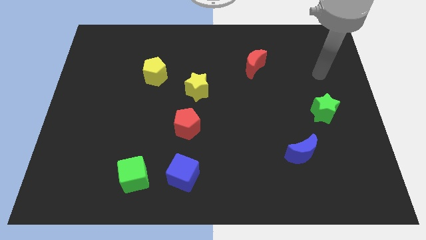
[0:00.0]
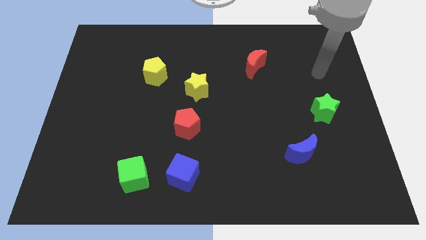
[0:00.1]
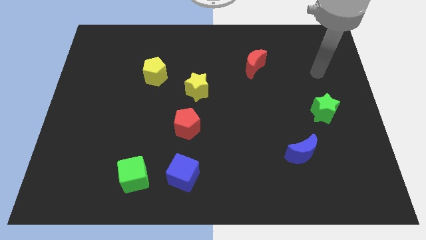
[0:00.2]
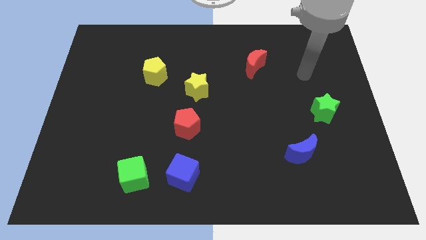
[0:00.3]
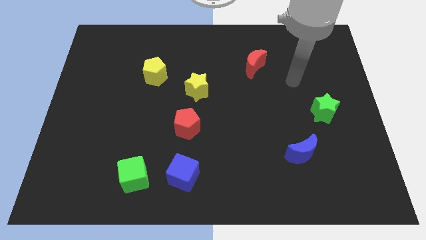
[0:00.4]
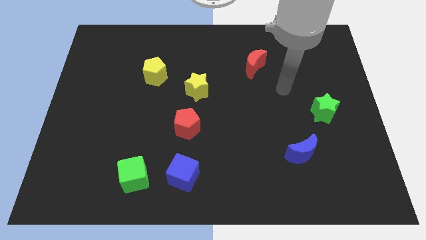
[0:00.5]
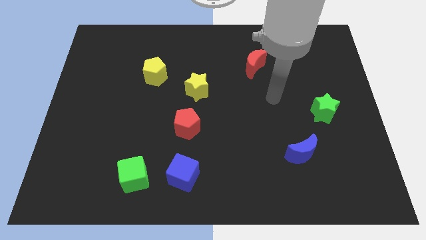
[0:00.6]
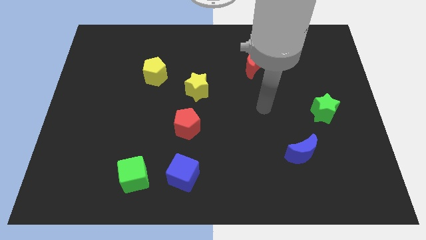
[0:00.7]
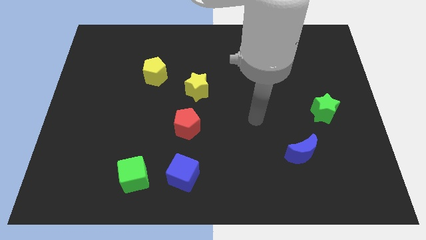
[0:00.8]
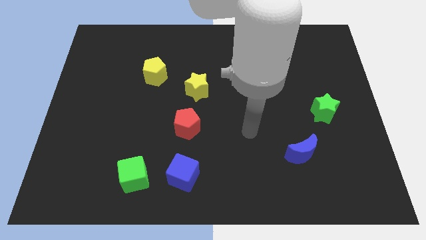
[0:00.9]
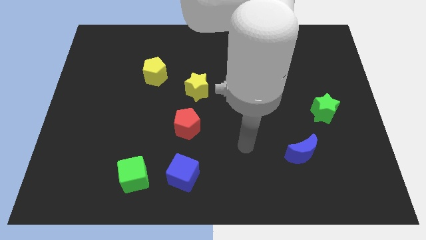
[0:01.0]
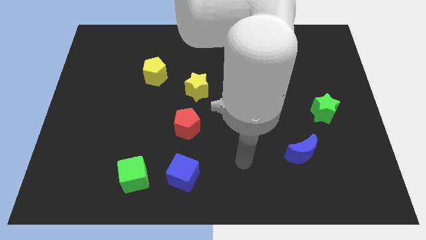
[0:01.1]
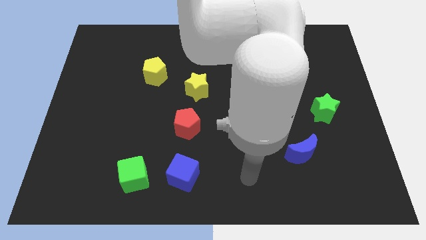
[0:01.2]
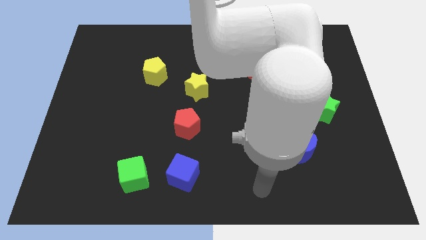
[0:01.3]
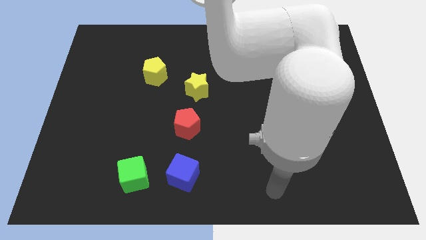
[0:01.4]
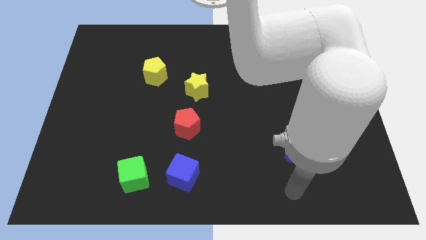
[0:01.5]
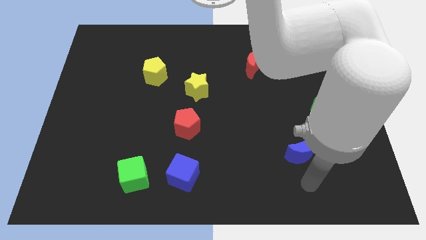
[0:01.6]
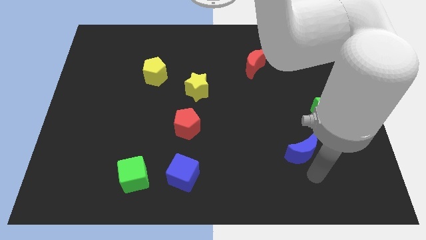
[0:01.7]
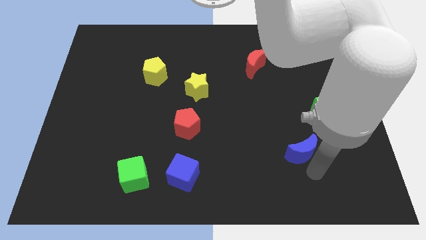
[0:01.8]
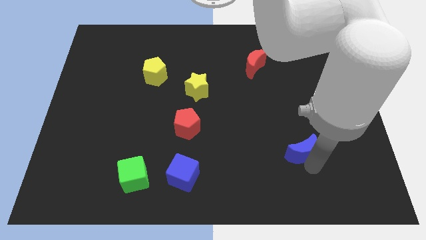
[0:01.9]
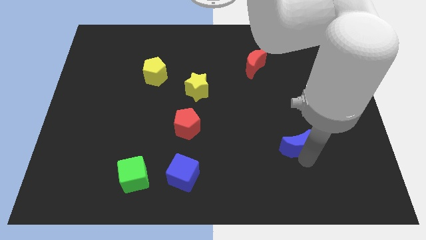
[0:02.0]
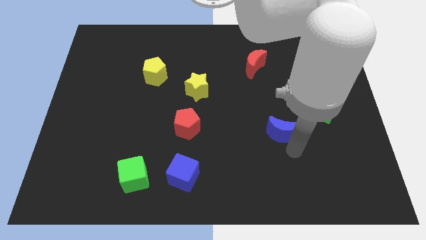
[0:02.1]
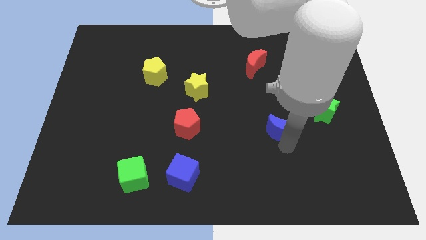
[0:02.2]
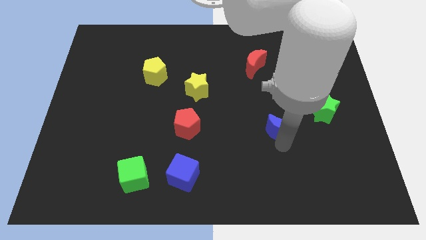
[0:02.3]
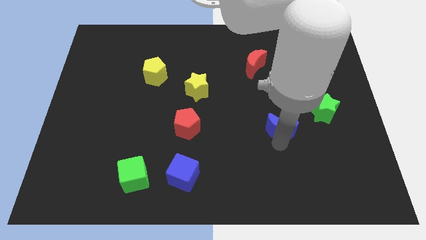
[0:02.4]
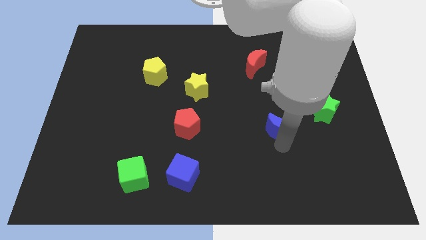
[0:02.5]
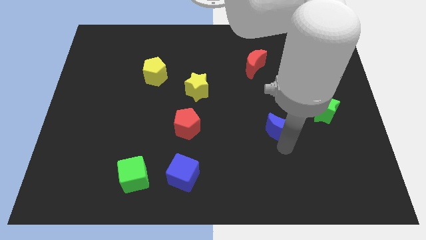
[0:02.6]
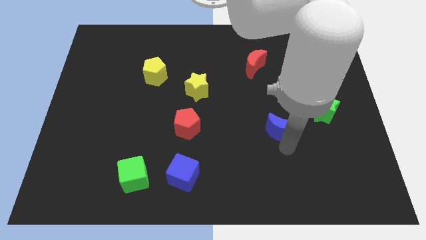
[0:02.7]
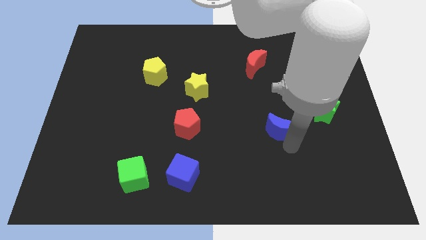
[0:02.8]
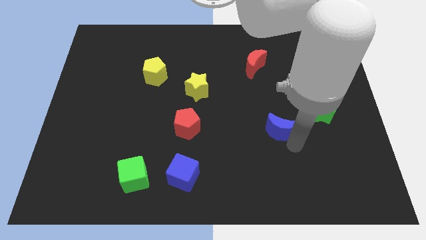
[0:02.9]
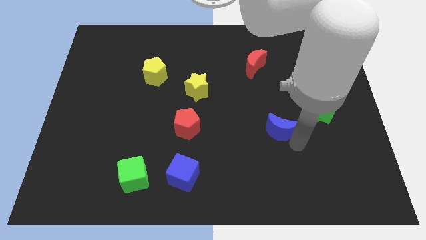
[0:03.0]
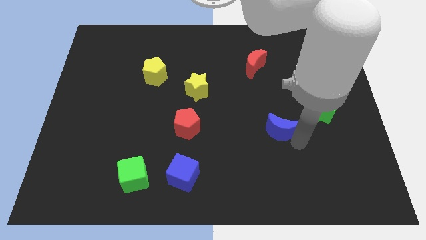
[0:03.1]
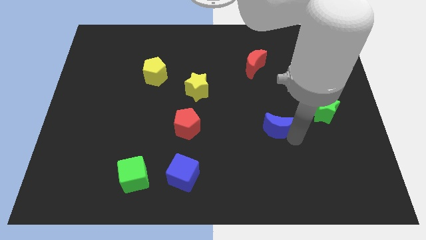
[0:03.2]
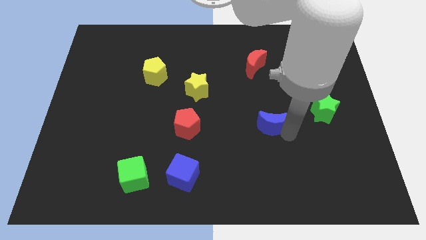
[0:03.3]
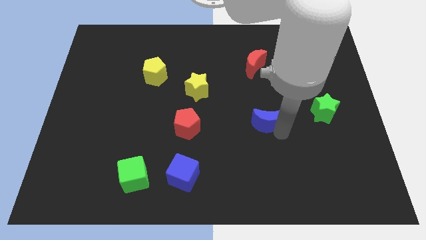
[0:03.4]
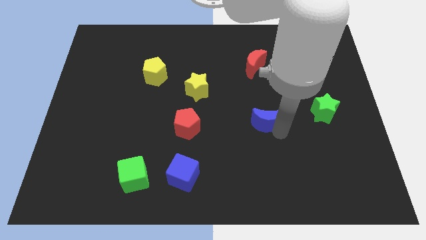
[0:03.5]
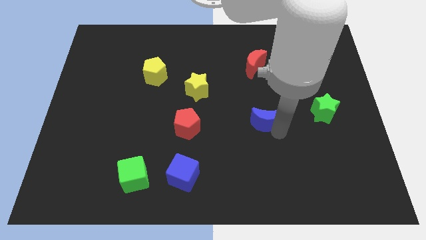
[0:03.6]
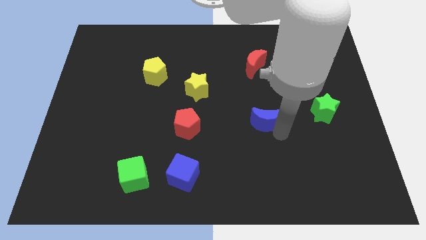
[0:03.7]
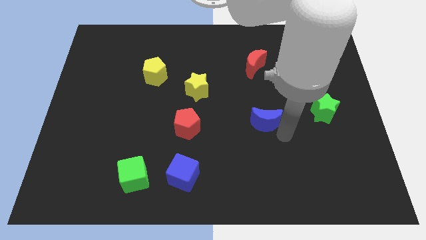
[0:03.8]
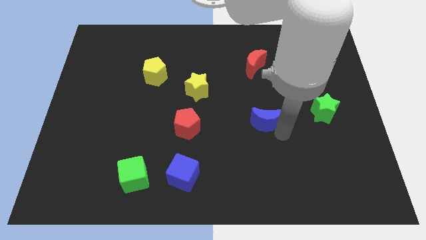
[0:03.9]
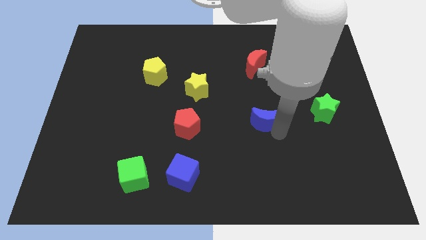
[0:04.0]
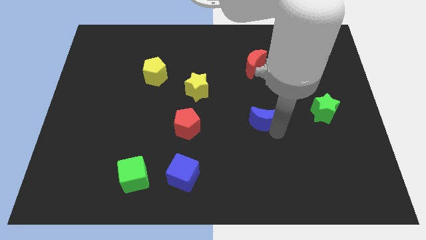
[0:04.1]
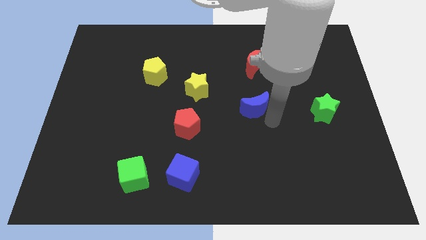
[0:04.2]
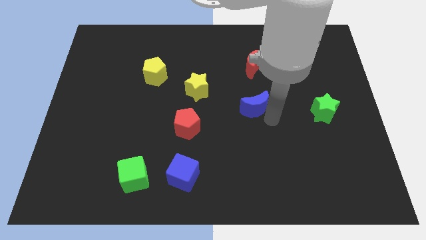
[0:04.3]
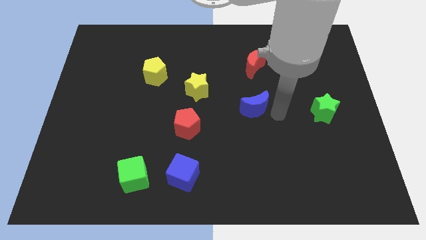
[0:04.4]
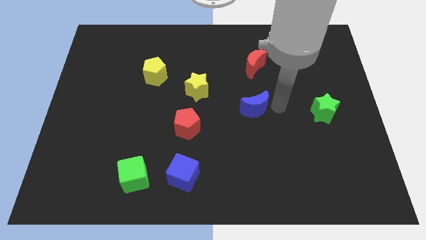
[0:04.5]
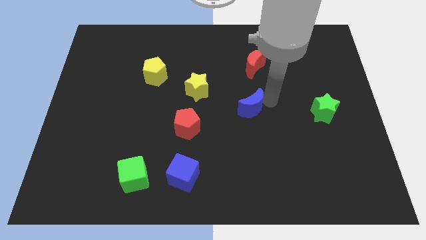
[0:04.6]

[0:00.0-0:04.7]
move the blue moon parallel left to the green star

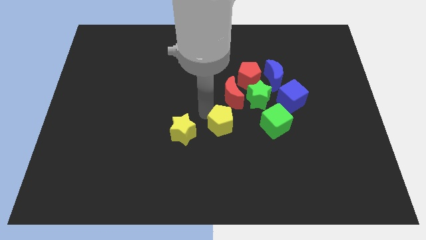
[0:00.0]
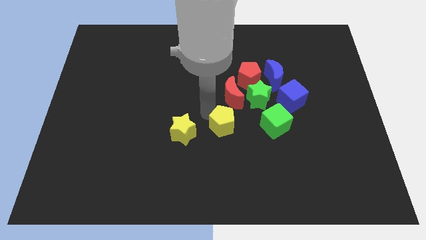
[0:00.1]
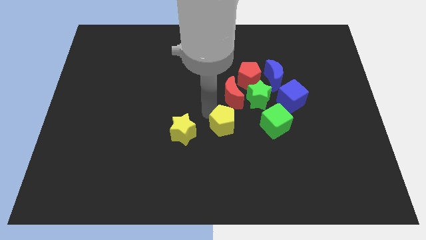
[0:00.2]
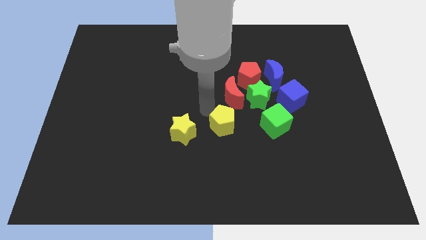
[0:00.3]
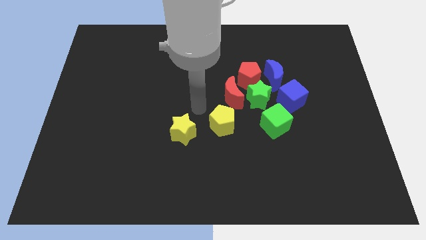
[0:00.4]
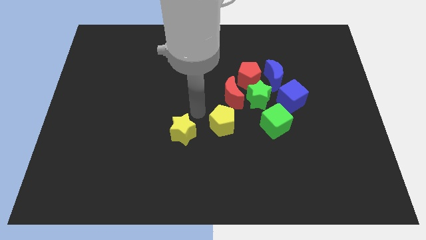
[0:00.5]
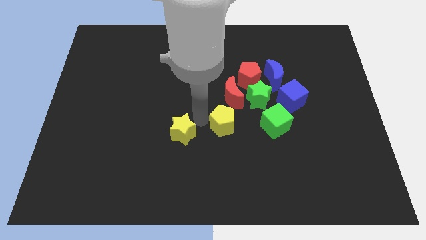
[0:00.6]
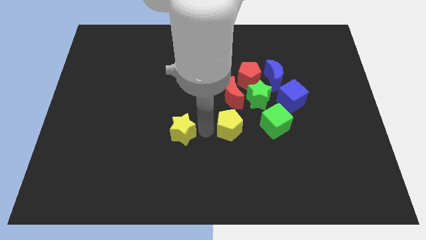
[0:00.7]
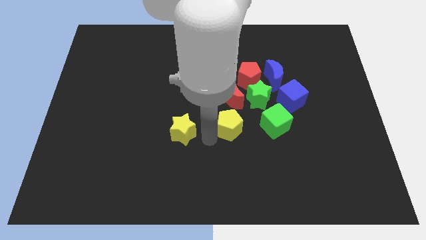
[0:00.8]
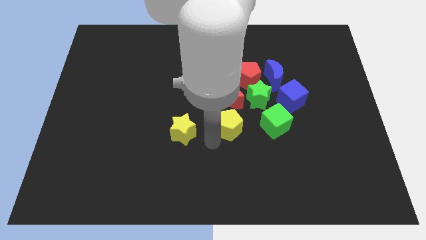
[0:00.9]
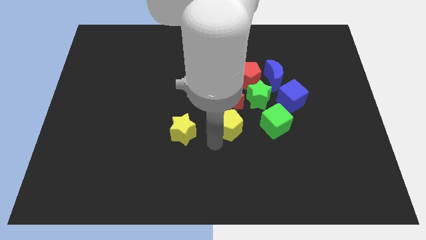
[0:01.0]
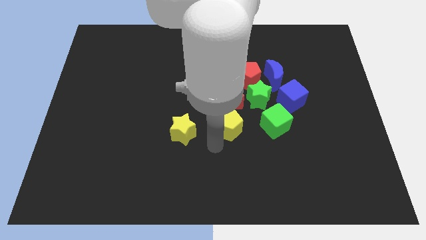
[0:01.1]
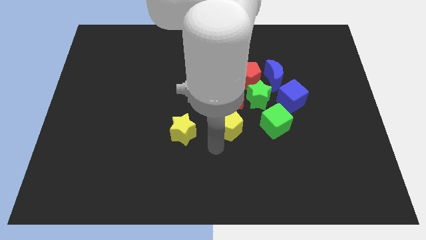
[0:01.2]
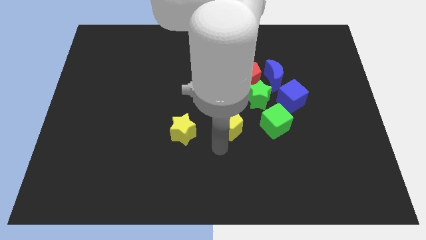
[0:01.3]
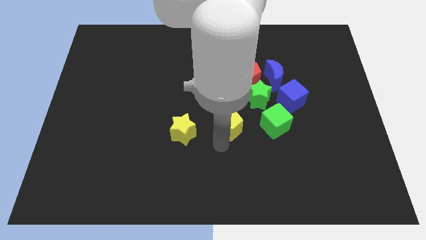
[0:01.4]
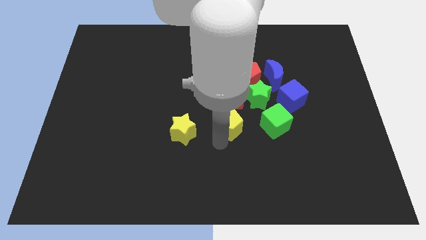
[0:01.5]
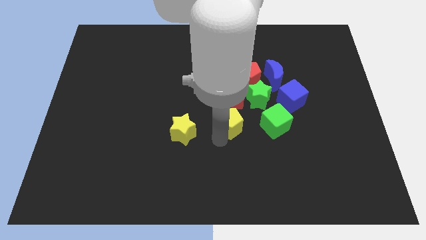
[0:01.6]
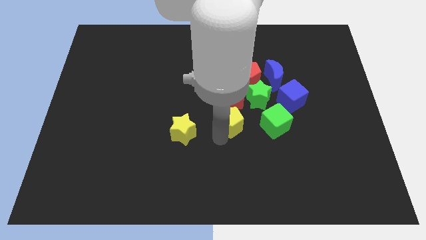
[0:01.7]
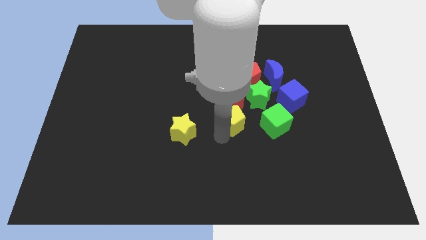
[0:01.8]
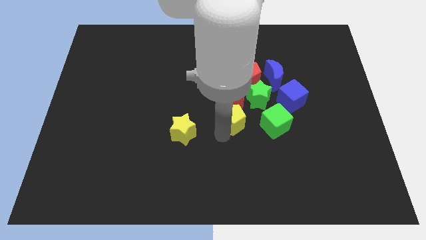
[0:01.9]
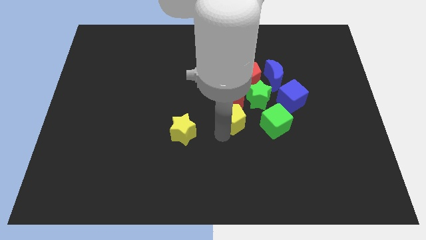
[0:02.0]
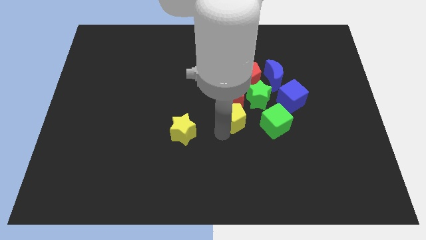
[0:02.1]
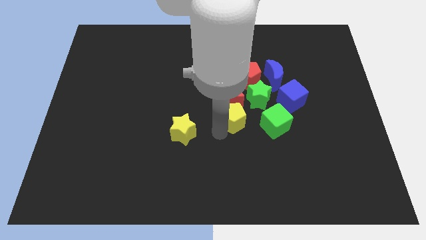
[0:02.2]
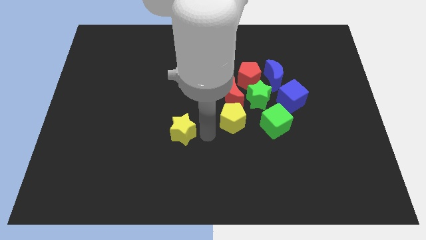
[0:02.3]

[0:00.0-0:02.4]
slide the yellow pentagon at the bottom of the red moon

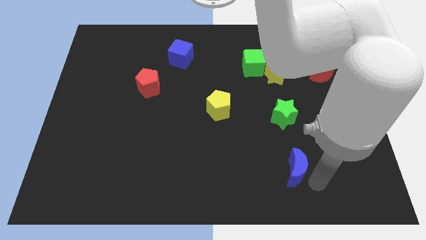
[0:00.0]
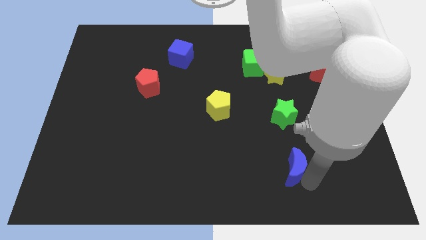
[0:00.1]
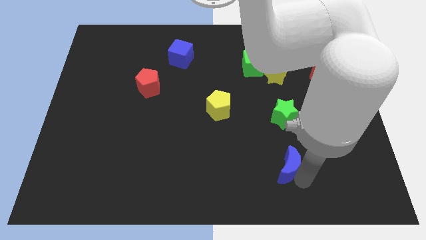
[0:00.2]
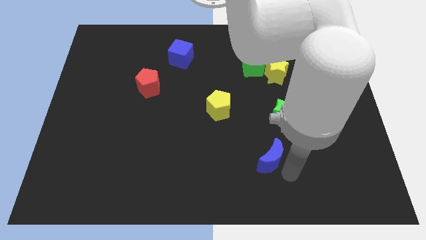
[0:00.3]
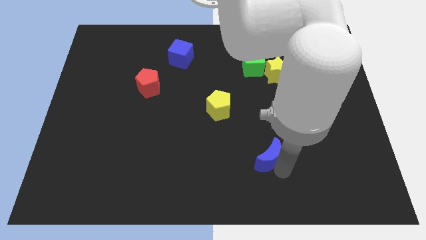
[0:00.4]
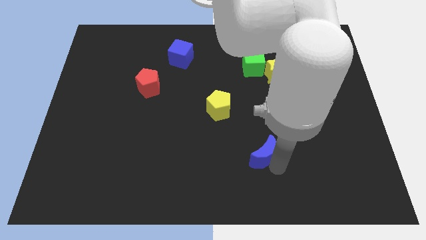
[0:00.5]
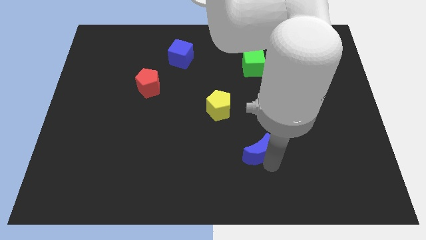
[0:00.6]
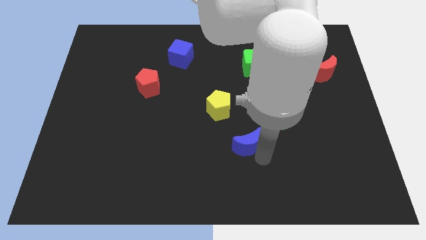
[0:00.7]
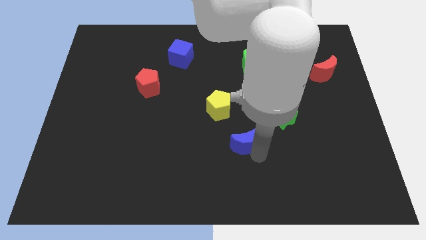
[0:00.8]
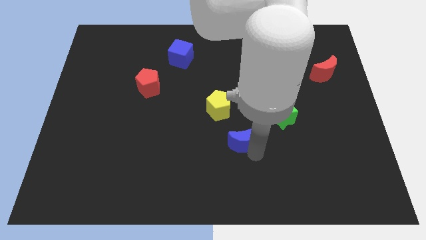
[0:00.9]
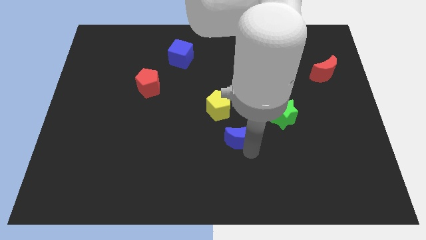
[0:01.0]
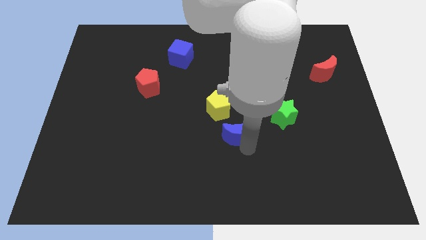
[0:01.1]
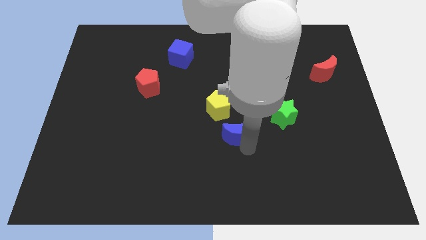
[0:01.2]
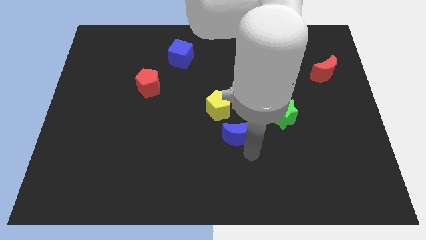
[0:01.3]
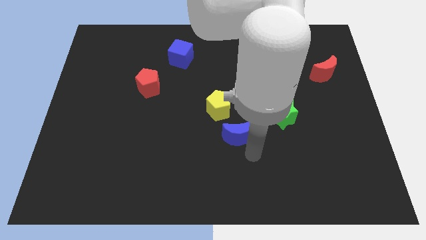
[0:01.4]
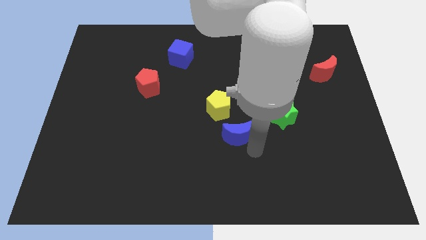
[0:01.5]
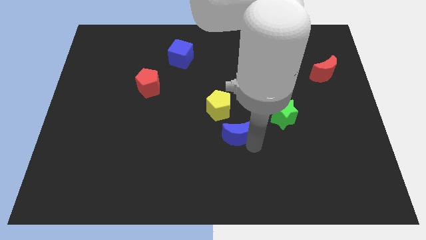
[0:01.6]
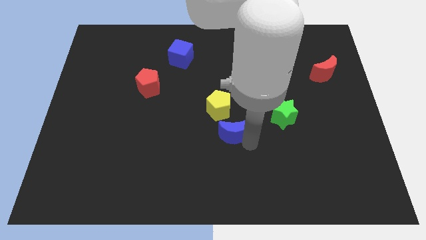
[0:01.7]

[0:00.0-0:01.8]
slide the blue moon to the bottom right side of the yellow pentagon

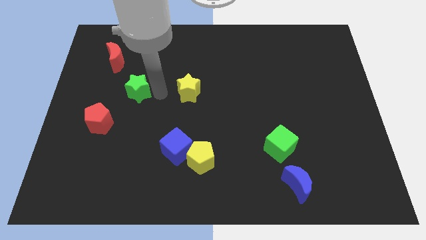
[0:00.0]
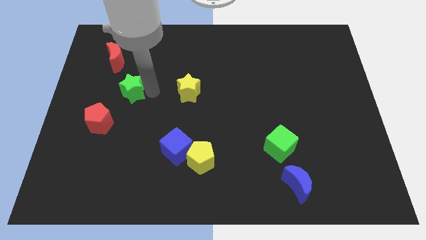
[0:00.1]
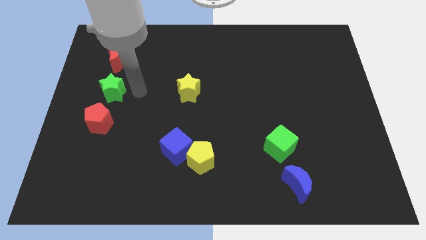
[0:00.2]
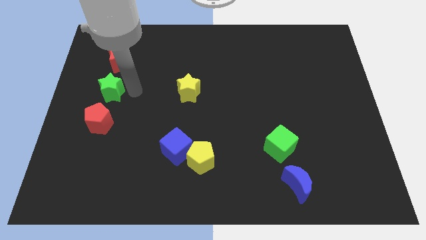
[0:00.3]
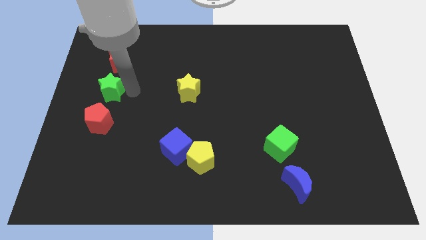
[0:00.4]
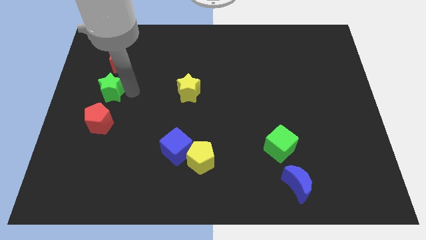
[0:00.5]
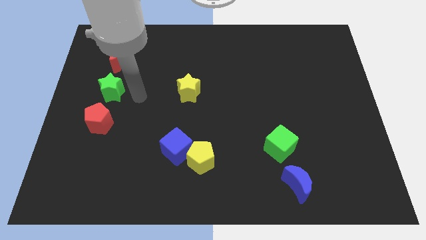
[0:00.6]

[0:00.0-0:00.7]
move the green star above the red pentagon
